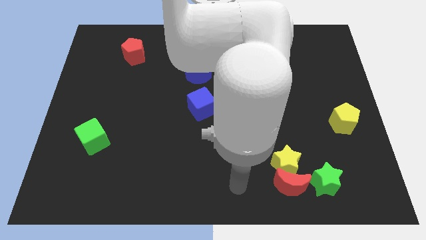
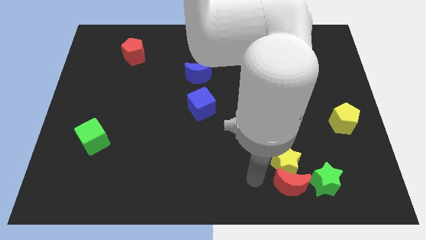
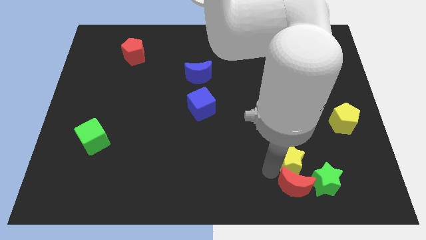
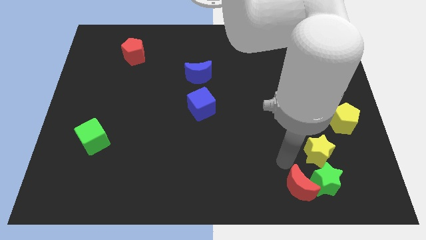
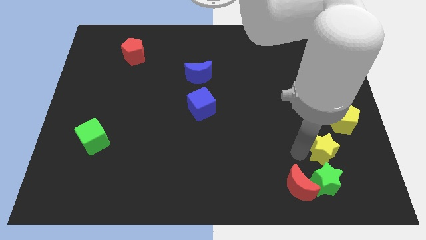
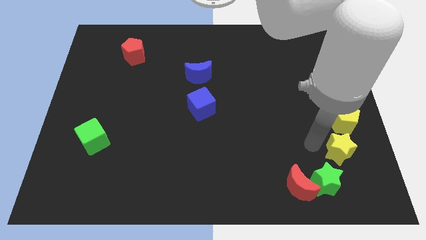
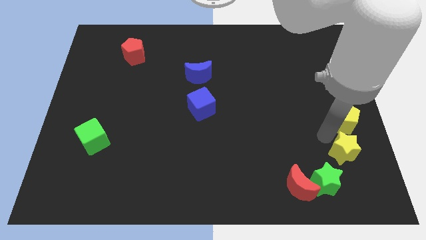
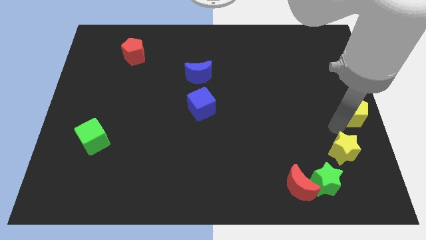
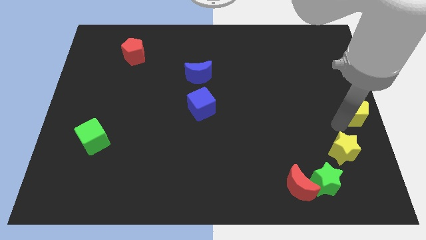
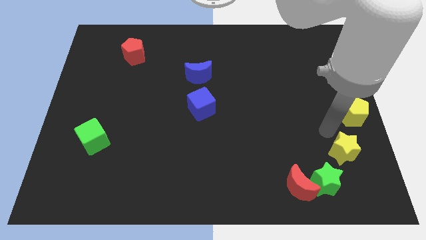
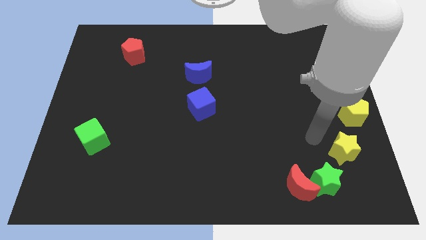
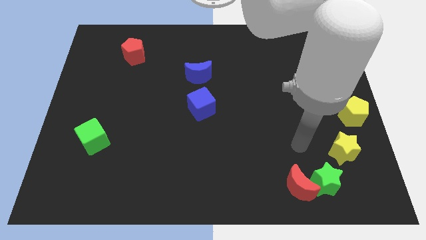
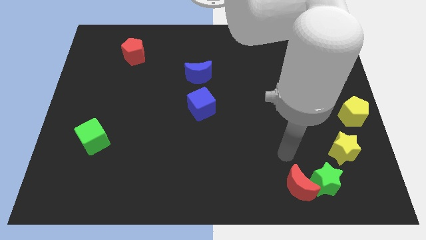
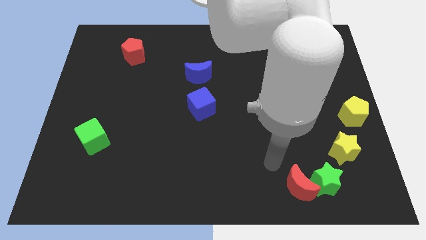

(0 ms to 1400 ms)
move the yellow star below the yellow pentagon

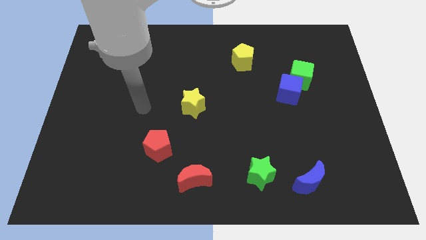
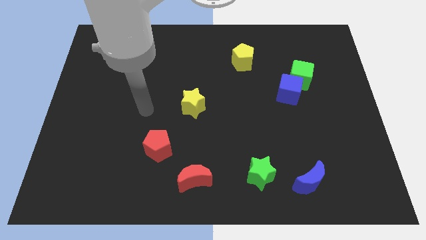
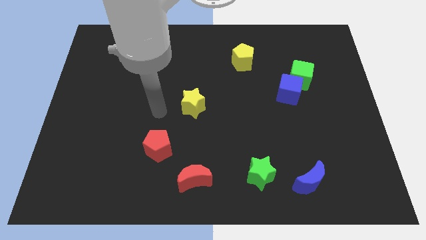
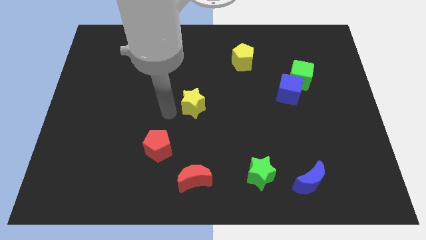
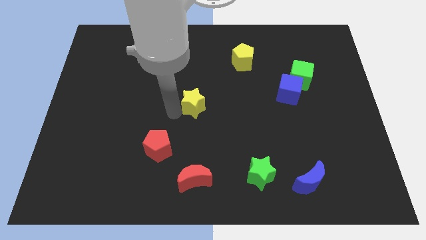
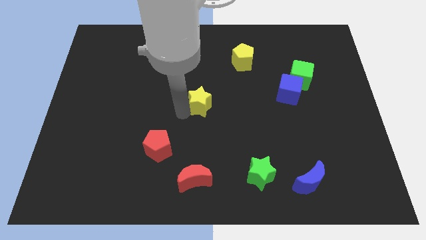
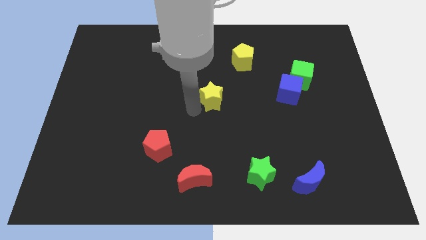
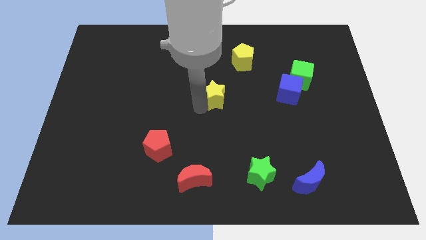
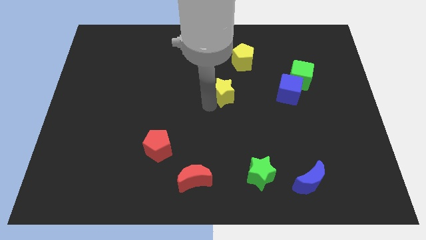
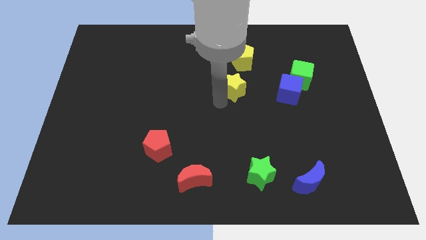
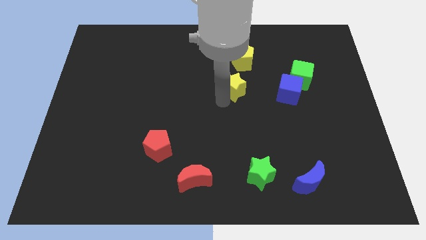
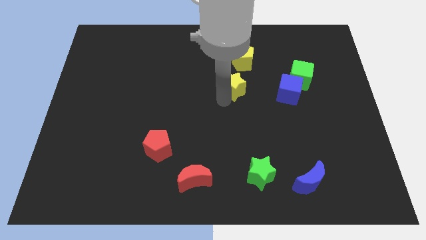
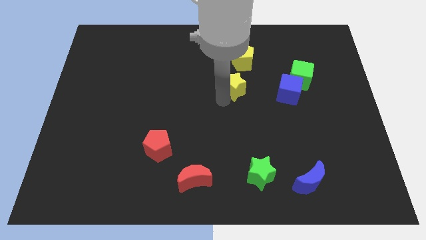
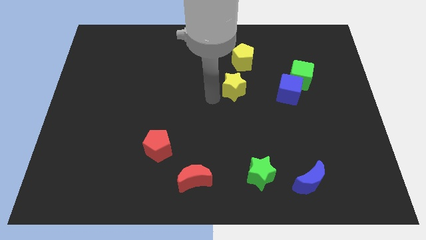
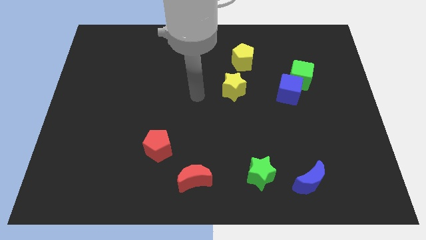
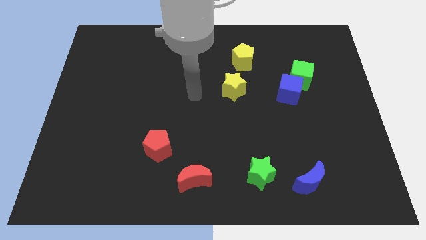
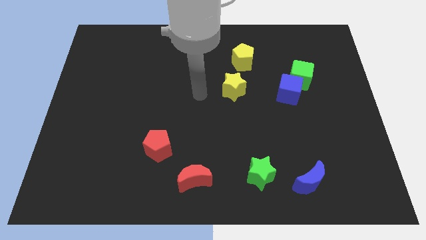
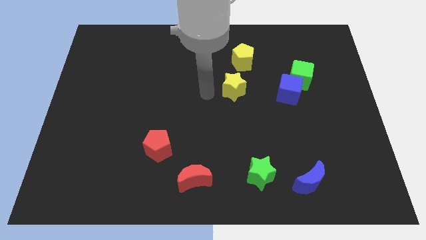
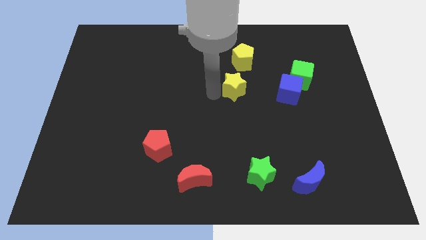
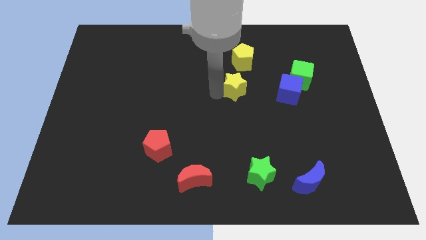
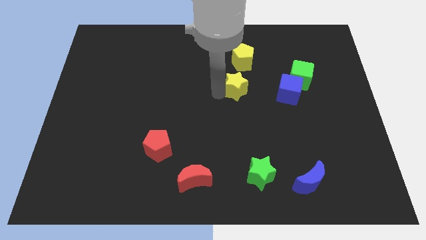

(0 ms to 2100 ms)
slide yellow star parallel to blue cube

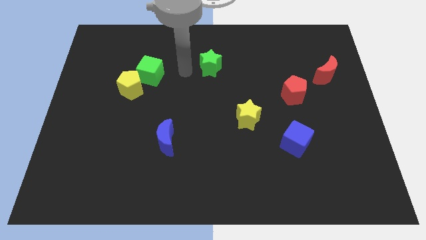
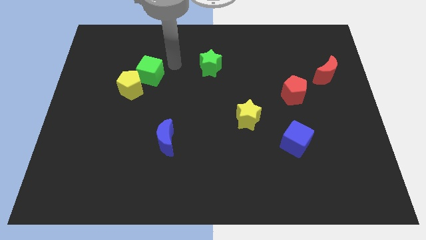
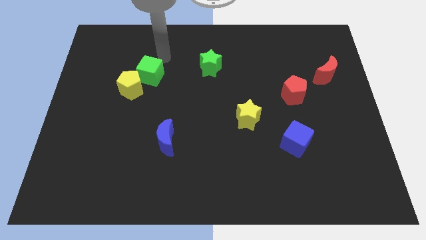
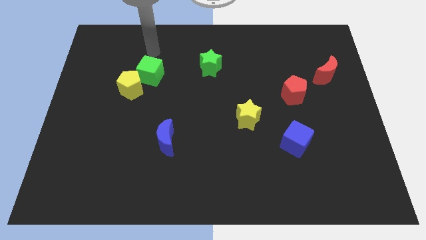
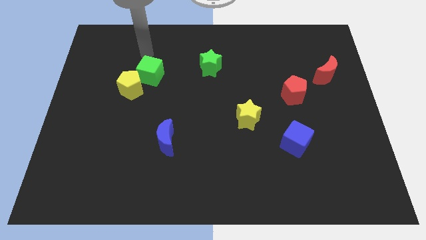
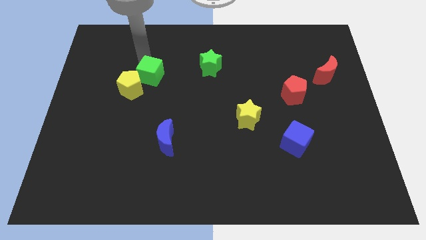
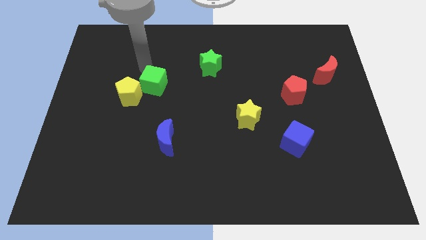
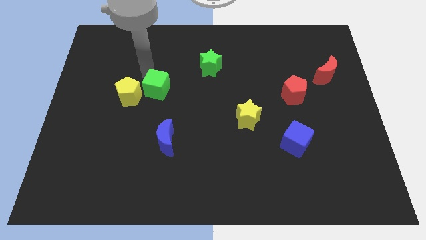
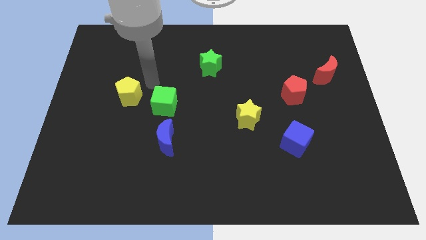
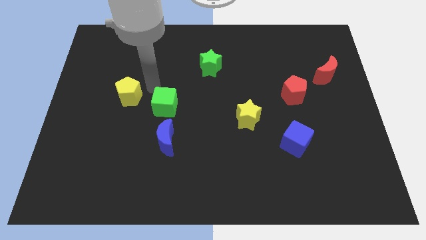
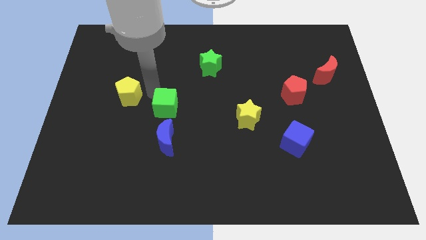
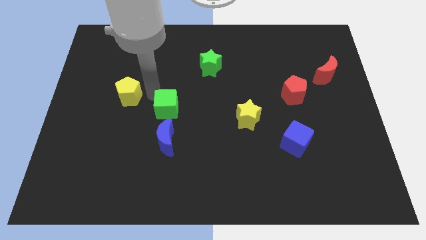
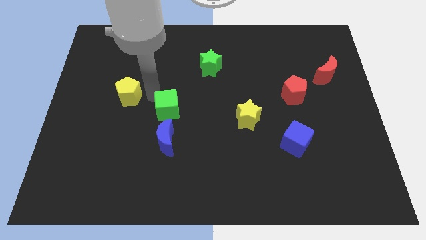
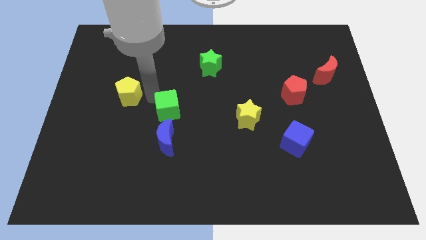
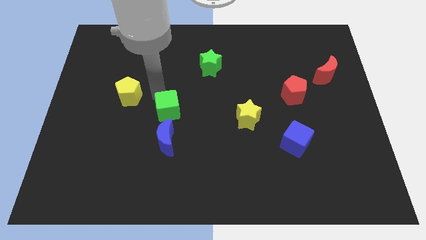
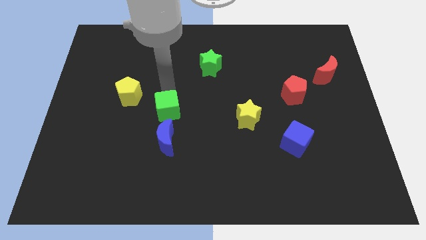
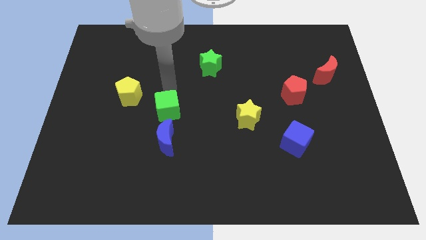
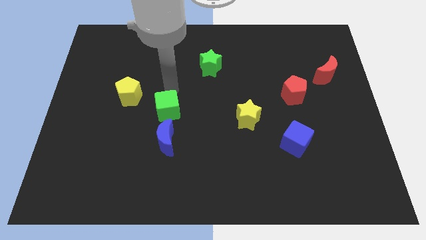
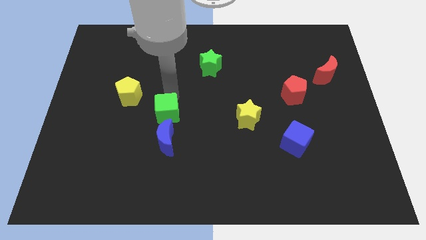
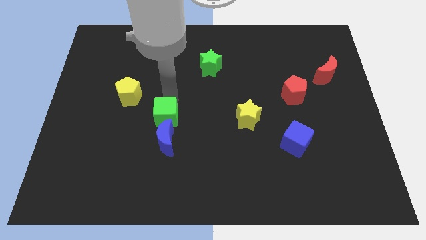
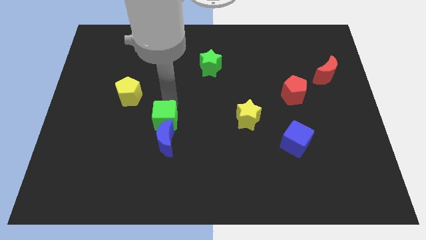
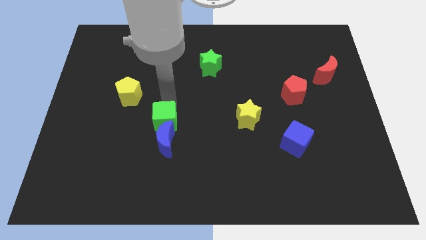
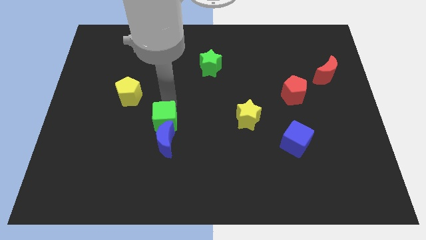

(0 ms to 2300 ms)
push the green cube into the blue crescent

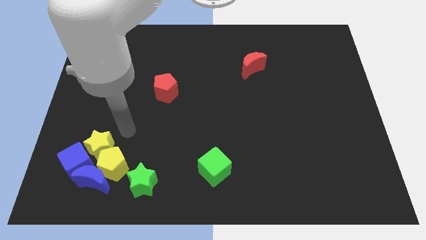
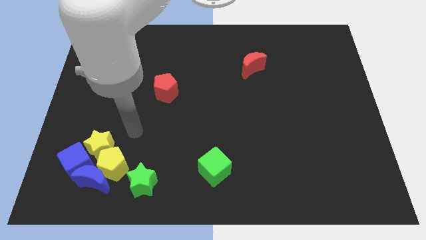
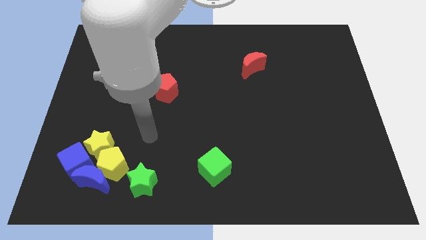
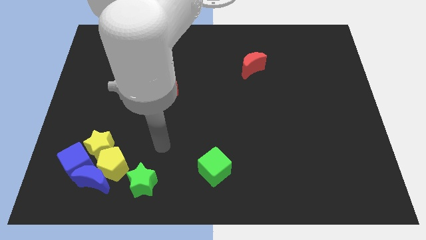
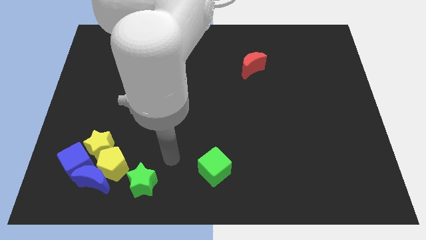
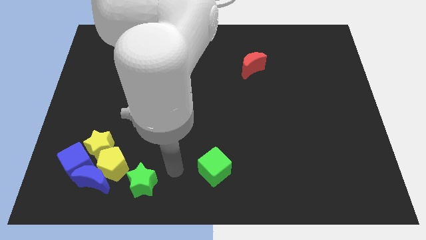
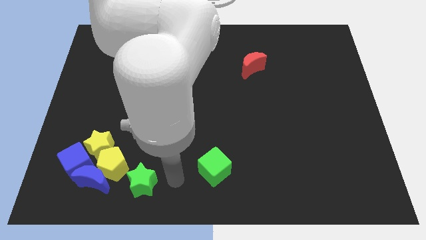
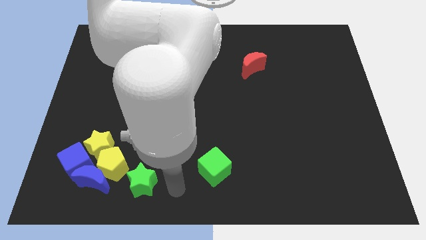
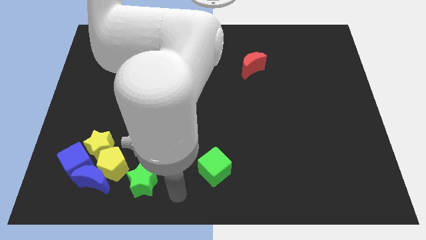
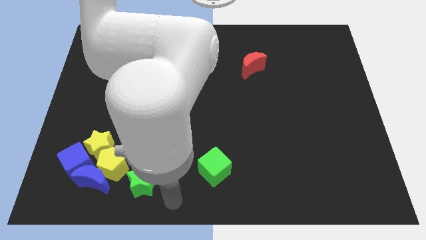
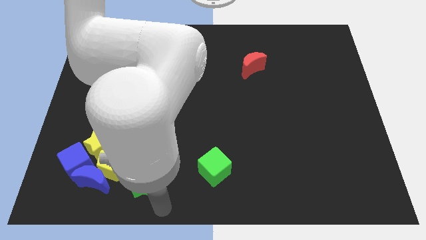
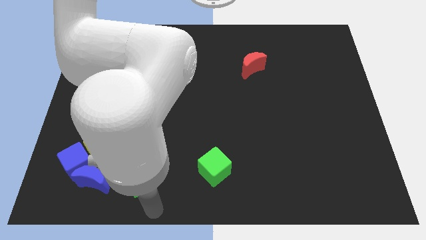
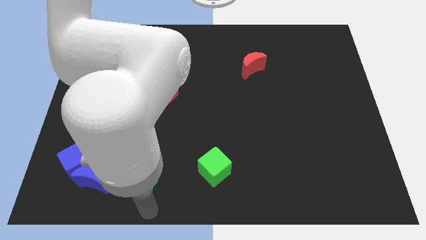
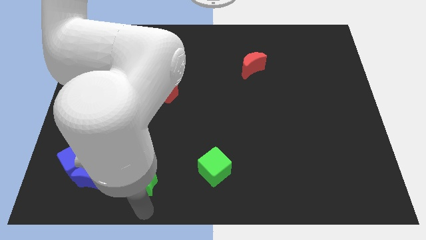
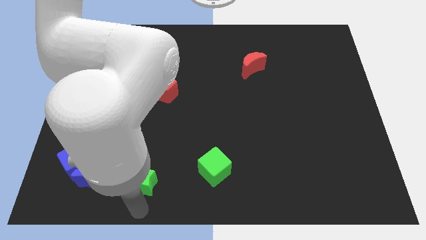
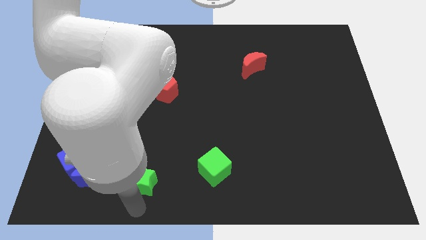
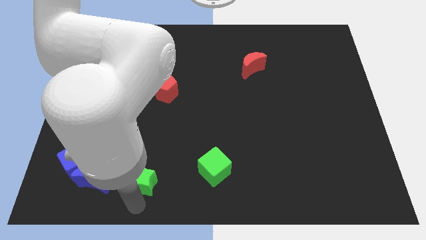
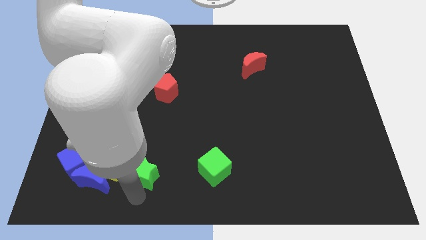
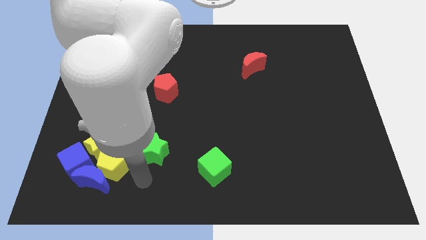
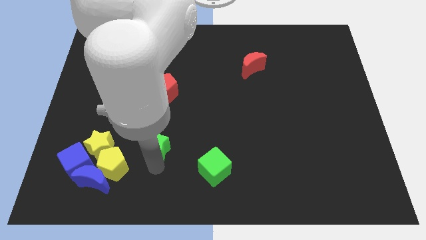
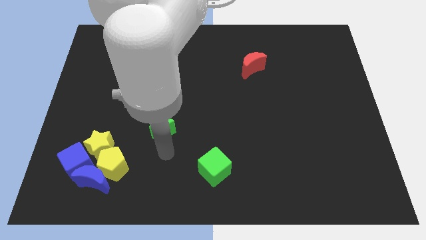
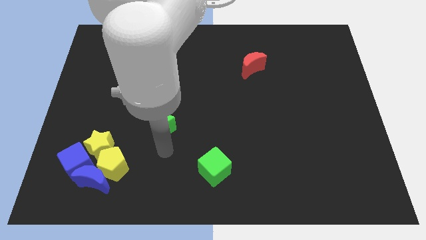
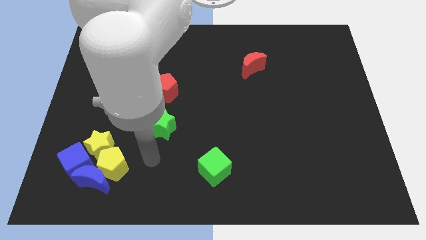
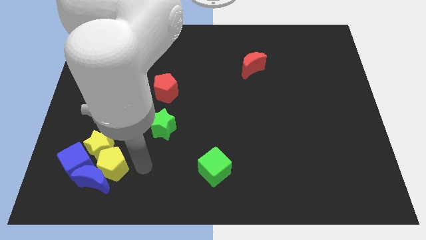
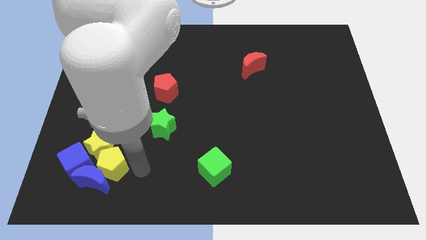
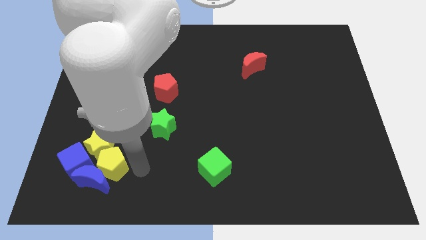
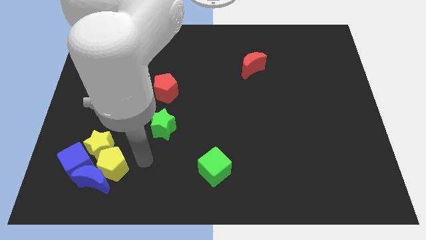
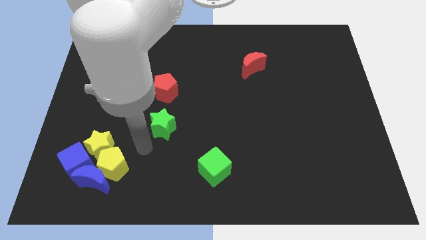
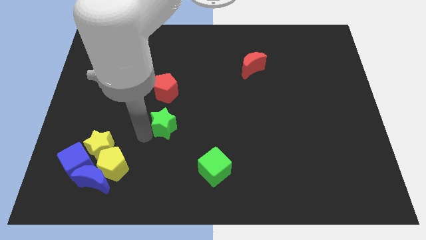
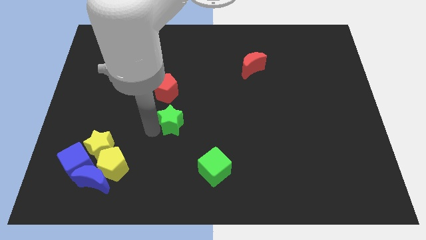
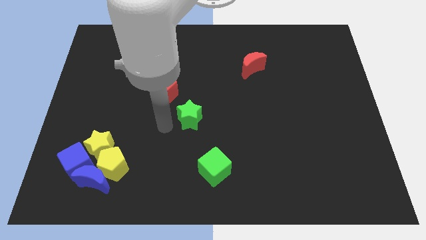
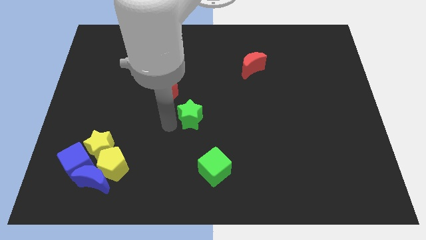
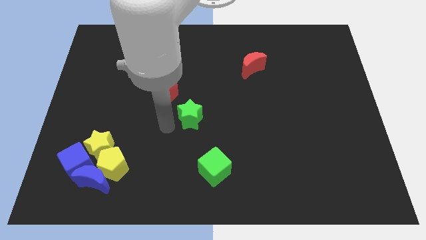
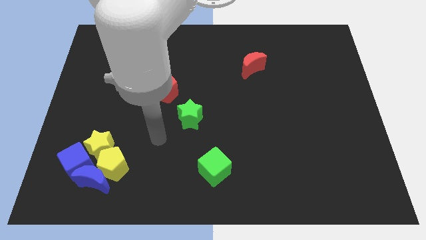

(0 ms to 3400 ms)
place the green star diagonally below the red pentagon
